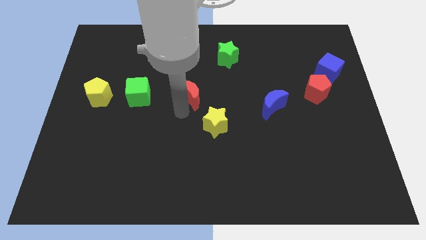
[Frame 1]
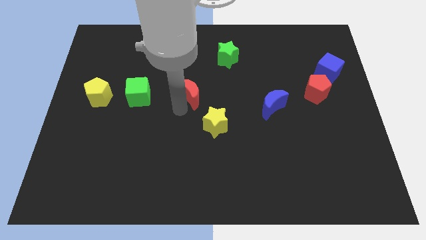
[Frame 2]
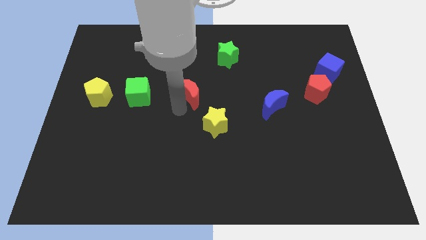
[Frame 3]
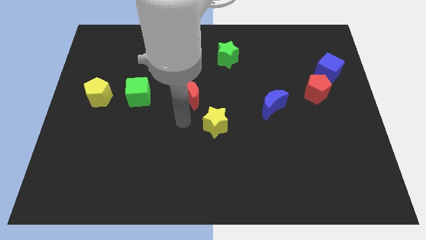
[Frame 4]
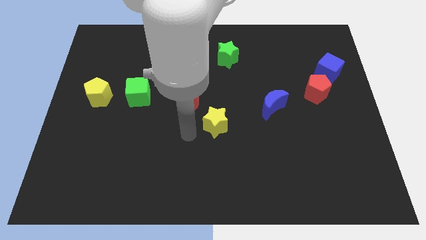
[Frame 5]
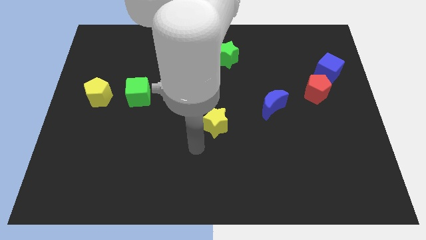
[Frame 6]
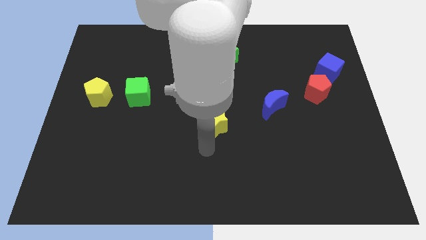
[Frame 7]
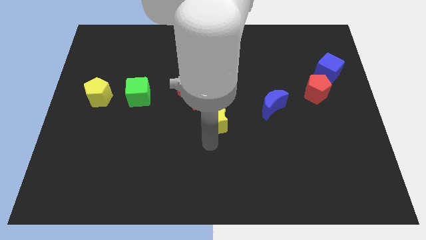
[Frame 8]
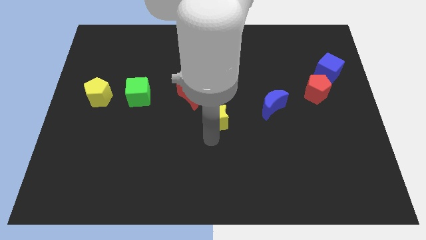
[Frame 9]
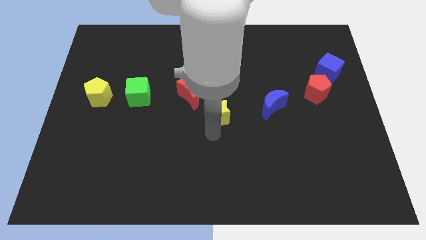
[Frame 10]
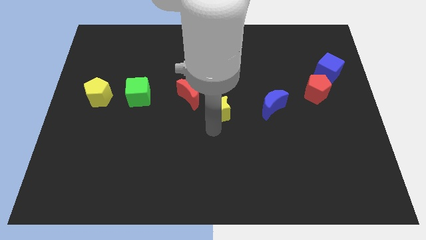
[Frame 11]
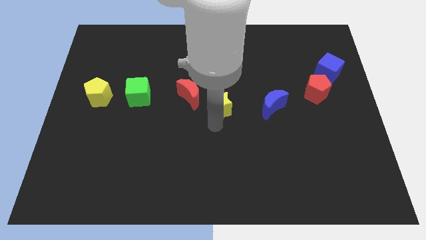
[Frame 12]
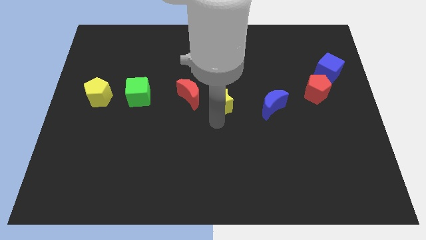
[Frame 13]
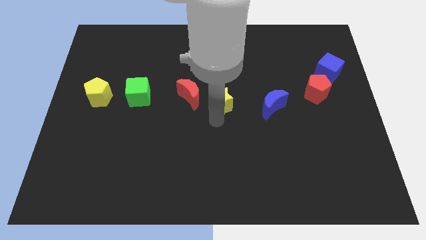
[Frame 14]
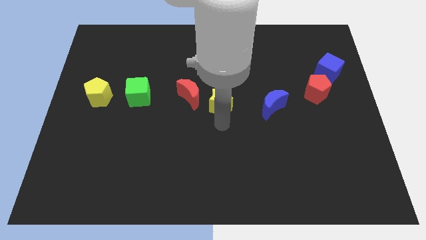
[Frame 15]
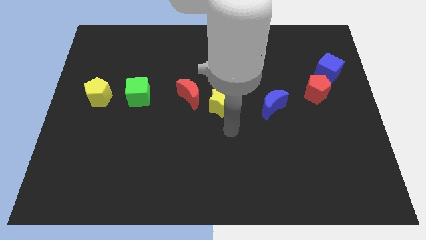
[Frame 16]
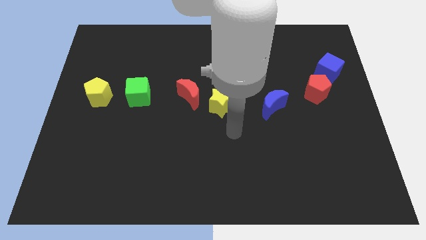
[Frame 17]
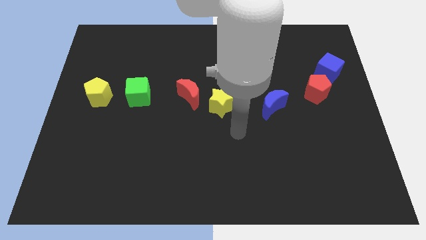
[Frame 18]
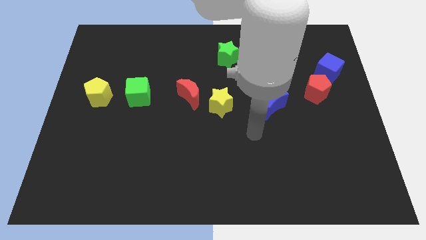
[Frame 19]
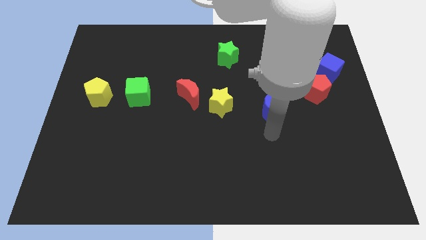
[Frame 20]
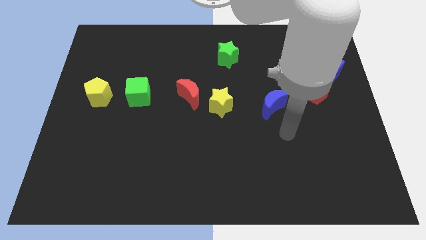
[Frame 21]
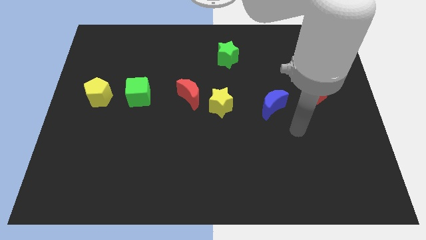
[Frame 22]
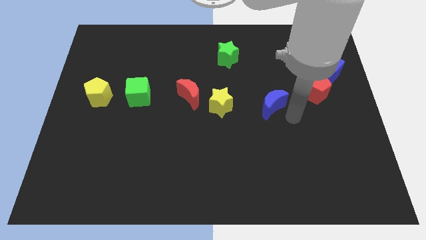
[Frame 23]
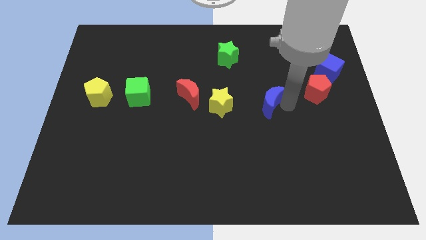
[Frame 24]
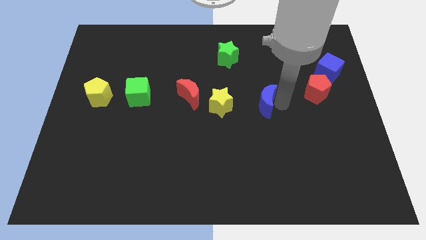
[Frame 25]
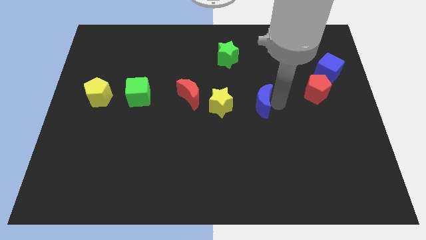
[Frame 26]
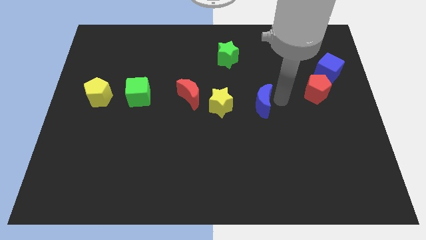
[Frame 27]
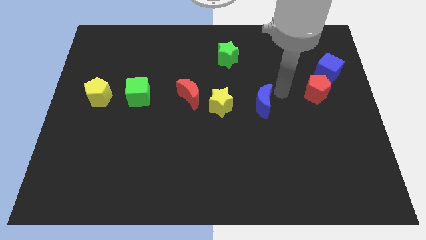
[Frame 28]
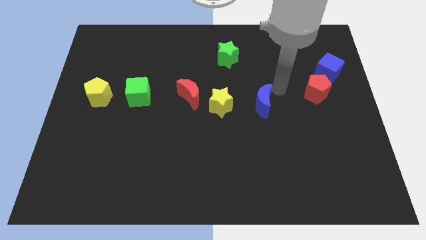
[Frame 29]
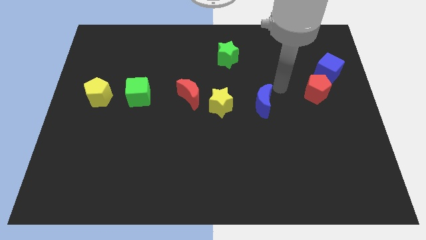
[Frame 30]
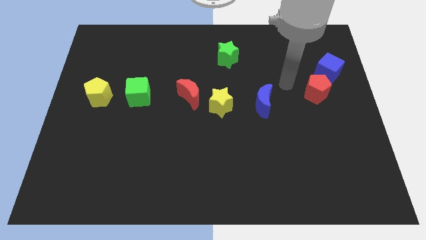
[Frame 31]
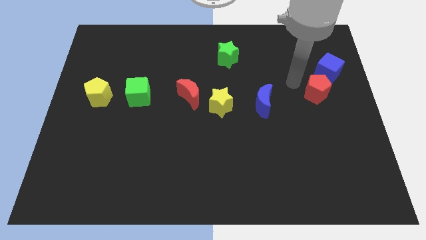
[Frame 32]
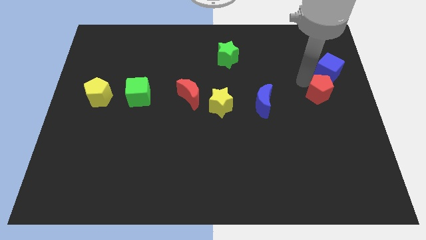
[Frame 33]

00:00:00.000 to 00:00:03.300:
adjust the yellow star and blue moon to the right of red moon

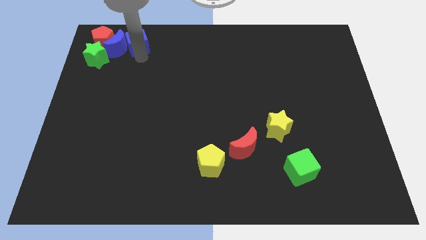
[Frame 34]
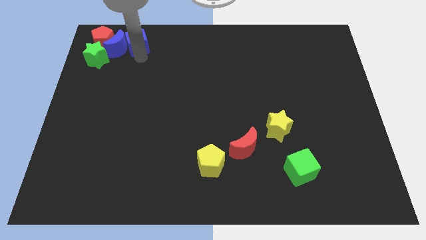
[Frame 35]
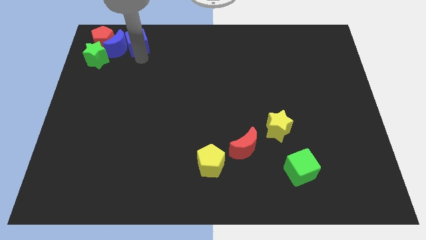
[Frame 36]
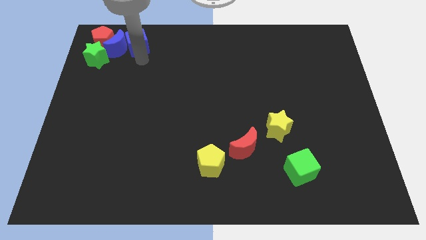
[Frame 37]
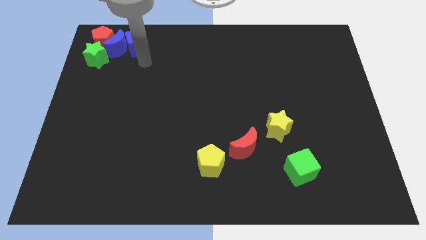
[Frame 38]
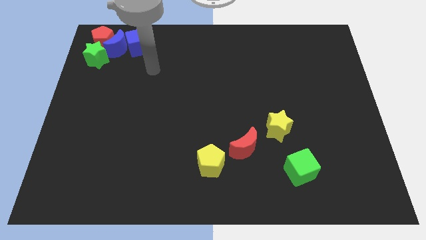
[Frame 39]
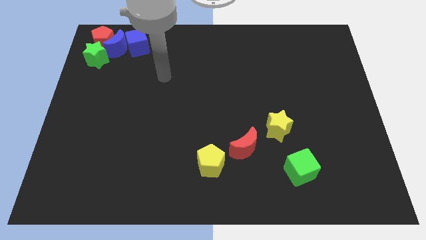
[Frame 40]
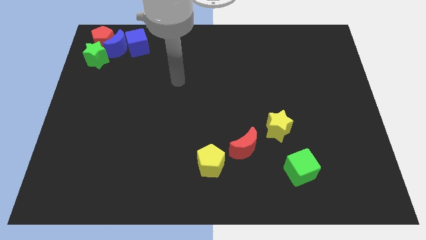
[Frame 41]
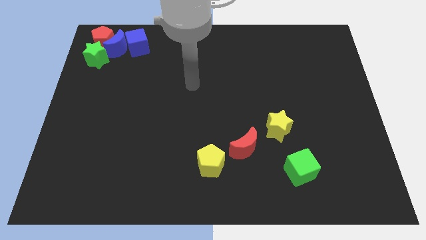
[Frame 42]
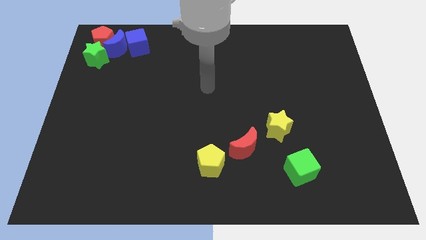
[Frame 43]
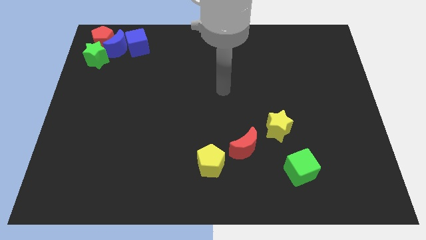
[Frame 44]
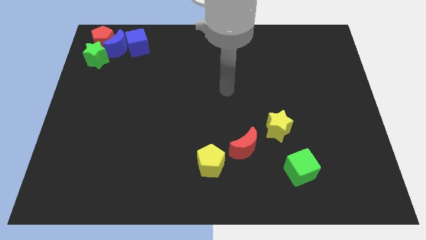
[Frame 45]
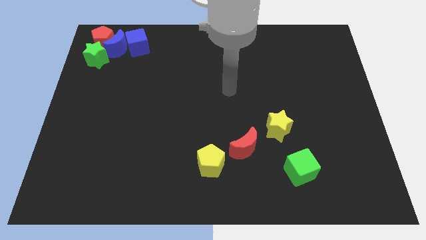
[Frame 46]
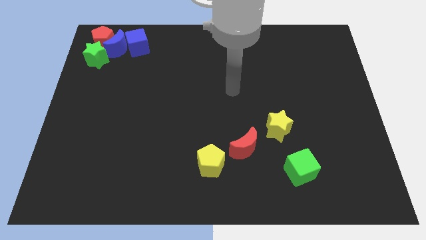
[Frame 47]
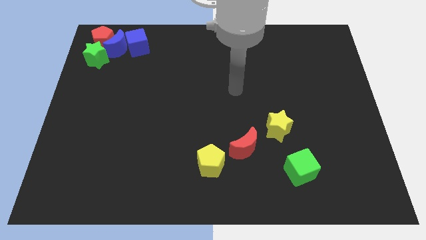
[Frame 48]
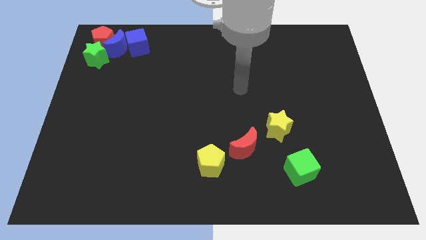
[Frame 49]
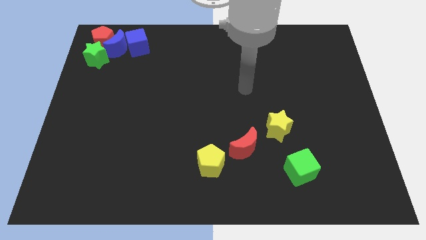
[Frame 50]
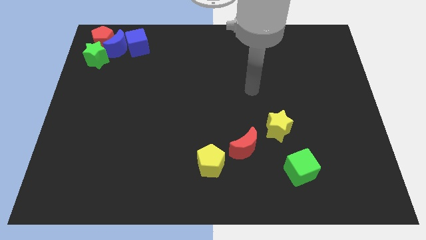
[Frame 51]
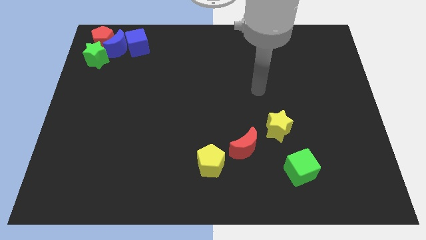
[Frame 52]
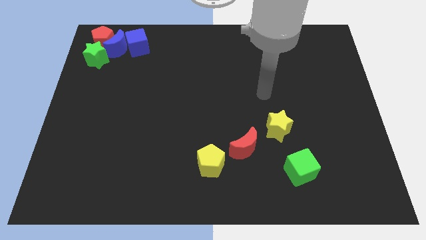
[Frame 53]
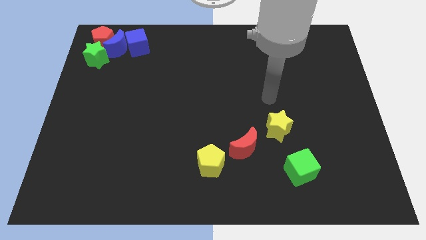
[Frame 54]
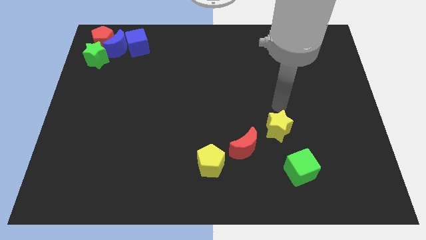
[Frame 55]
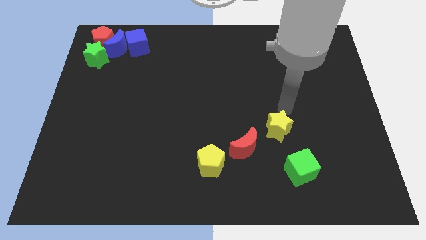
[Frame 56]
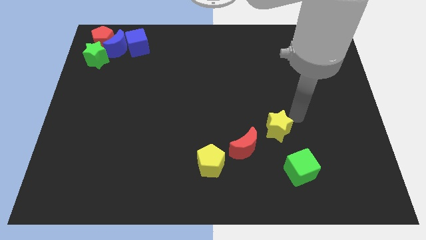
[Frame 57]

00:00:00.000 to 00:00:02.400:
move your arm away from the blue cube

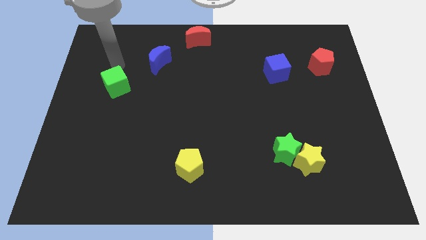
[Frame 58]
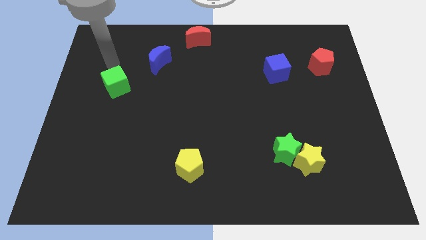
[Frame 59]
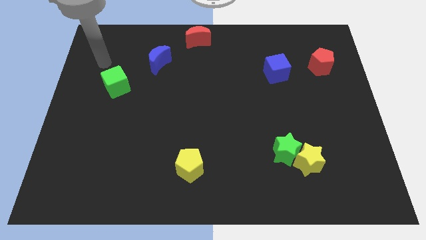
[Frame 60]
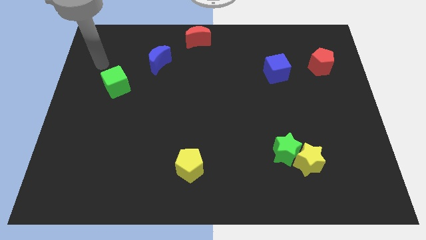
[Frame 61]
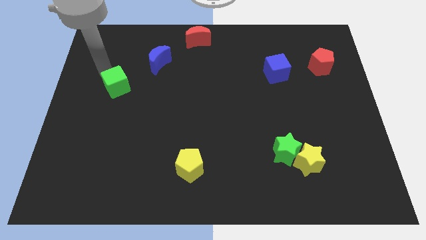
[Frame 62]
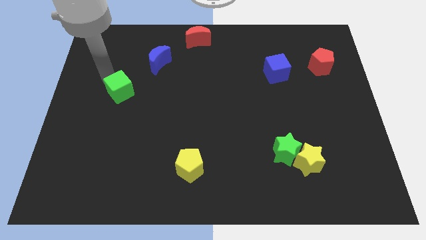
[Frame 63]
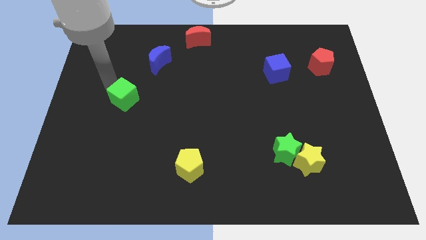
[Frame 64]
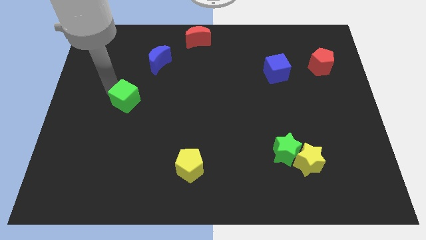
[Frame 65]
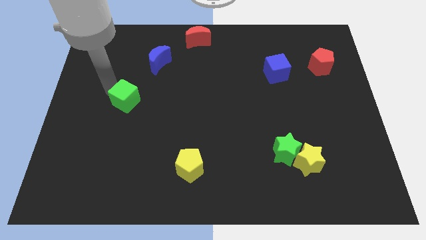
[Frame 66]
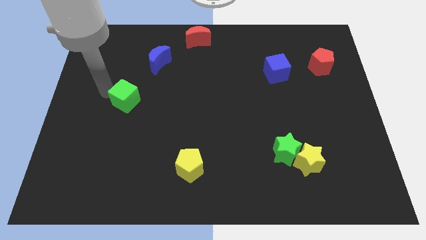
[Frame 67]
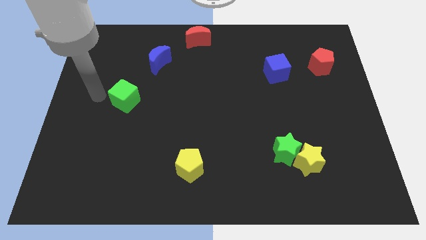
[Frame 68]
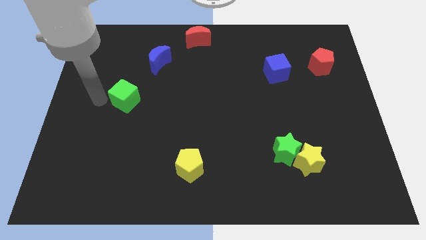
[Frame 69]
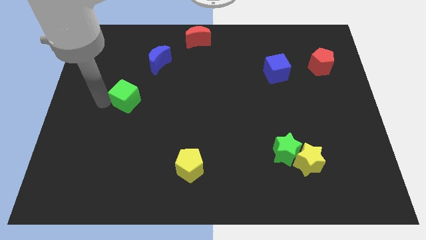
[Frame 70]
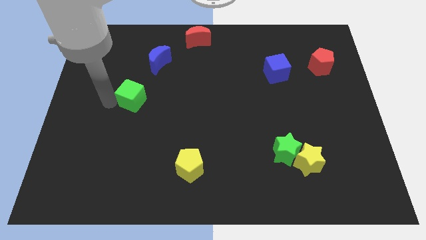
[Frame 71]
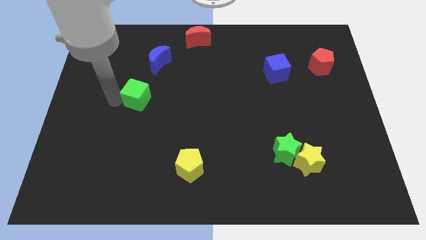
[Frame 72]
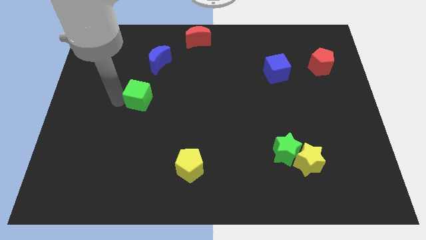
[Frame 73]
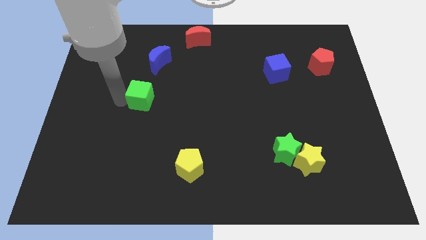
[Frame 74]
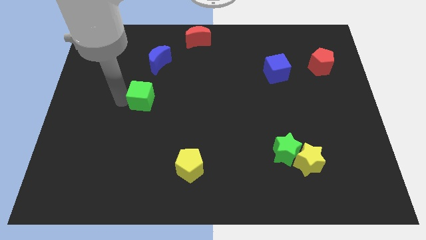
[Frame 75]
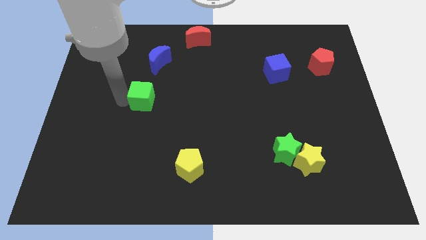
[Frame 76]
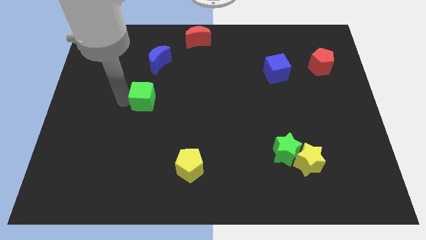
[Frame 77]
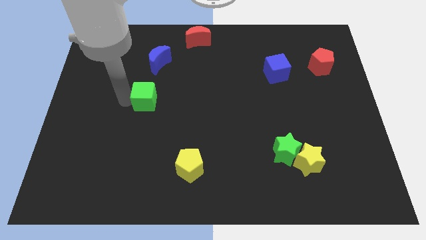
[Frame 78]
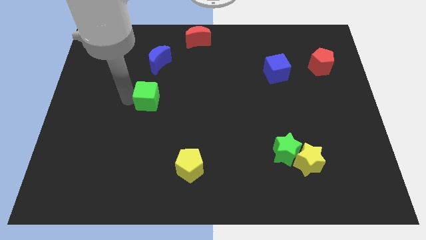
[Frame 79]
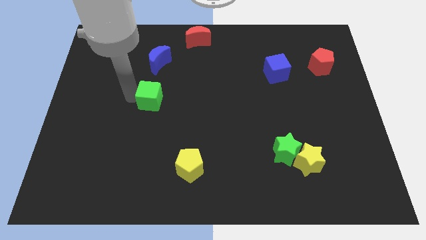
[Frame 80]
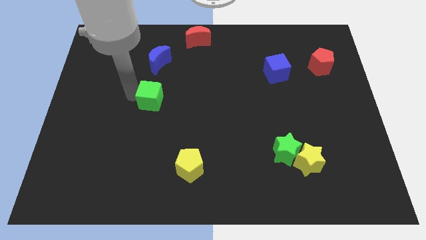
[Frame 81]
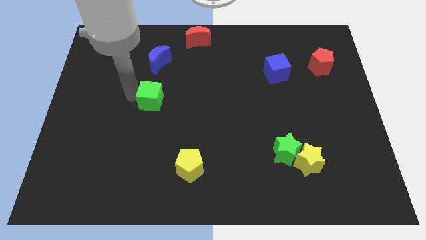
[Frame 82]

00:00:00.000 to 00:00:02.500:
move the green cube to the bottom of the blue crescent

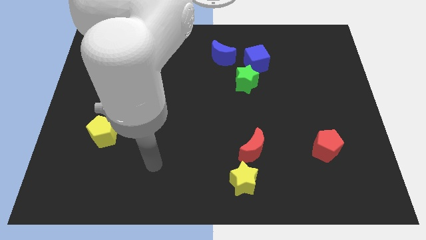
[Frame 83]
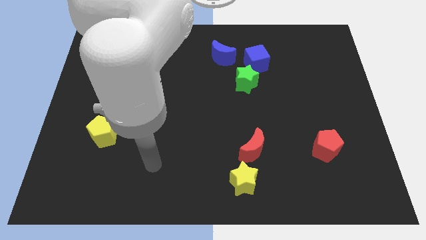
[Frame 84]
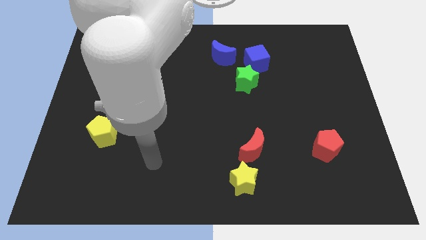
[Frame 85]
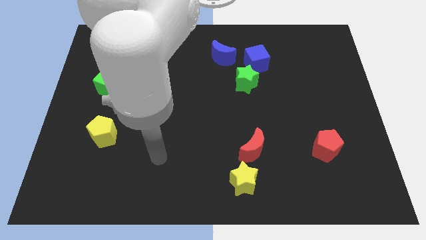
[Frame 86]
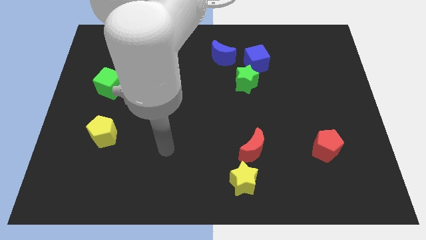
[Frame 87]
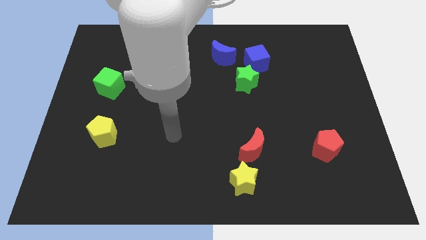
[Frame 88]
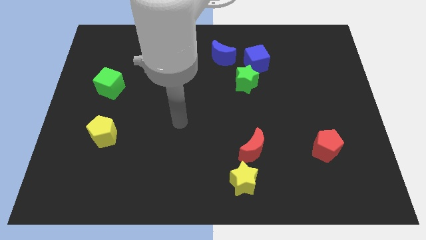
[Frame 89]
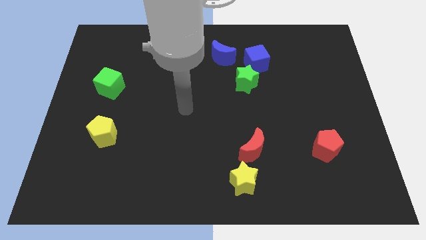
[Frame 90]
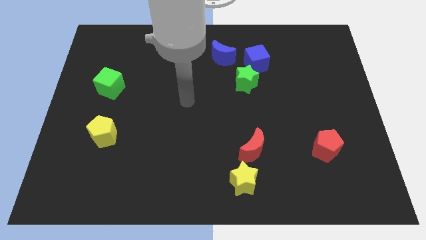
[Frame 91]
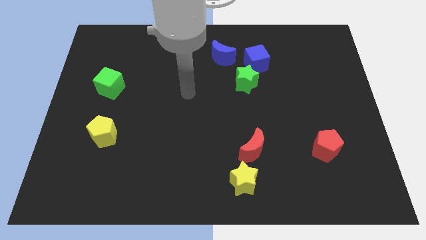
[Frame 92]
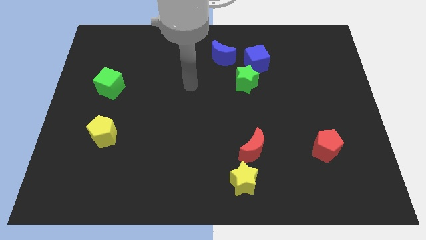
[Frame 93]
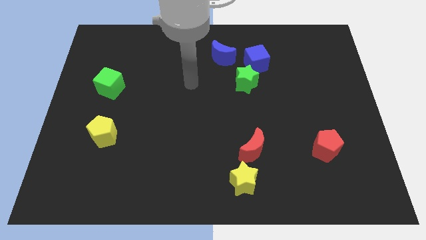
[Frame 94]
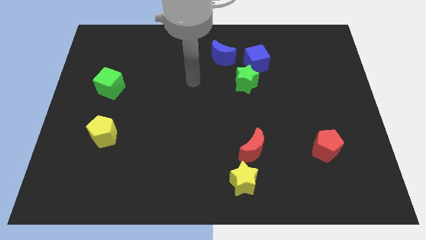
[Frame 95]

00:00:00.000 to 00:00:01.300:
place your hand to the left of the green star
